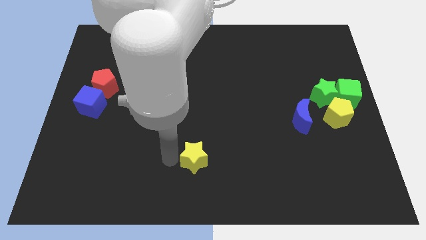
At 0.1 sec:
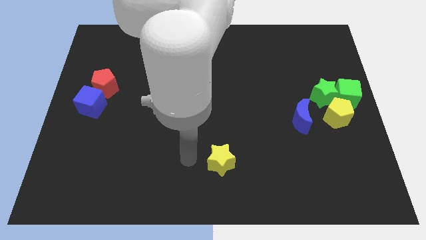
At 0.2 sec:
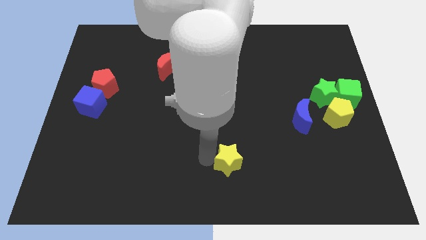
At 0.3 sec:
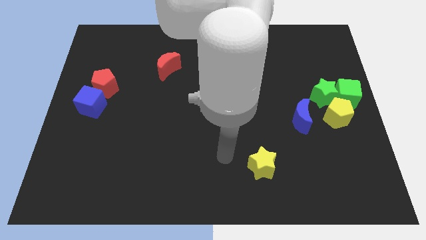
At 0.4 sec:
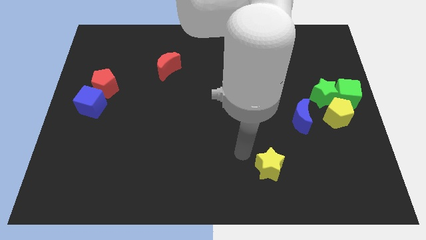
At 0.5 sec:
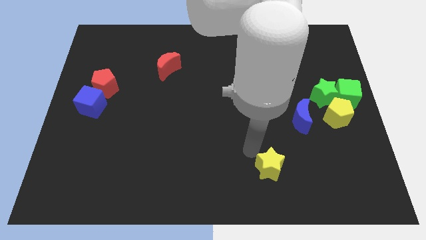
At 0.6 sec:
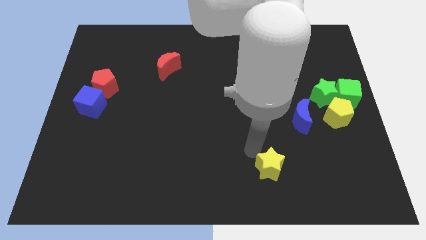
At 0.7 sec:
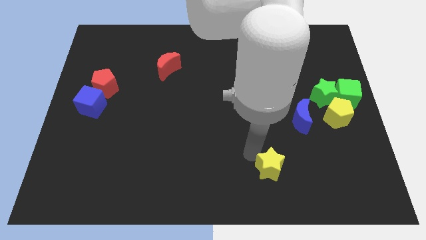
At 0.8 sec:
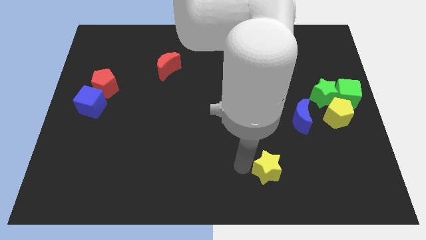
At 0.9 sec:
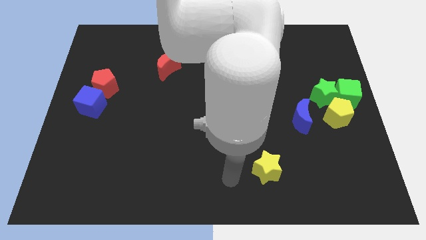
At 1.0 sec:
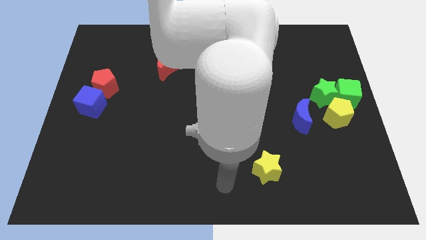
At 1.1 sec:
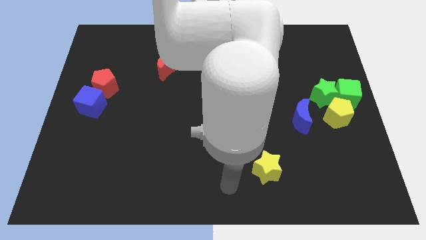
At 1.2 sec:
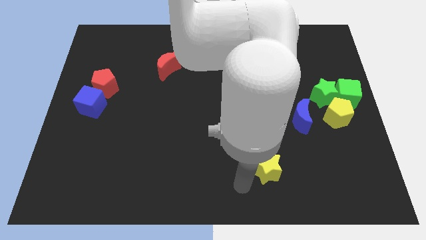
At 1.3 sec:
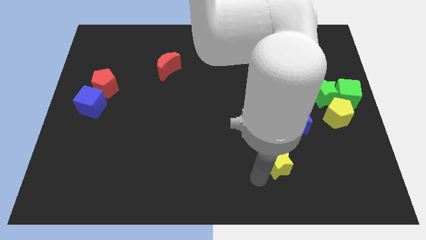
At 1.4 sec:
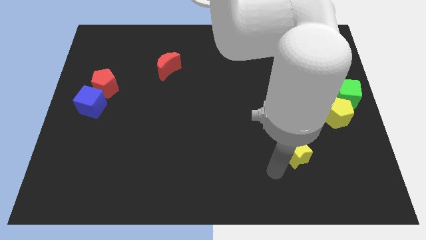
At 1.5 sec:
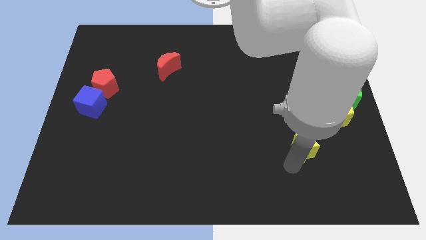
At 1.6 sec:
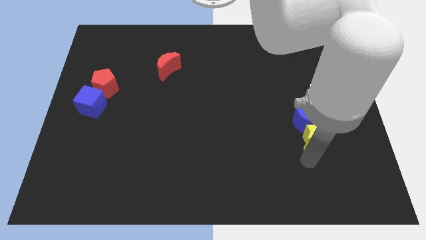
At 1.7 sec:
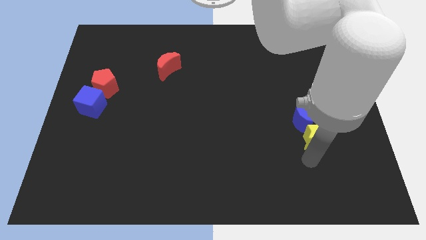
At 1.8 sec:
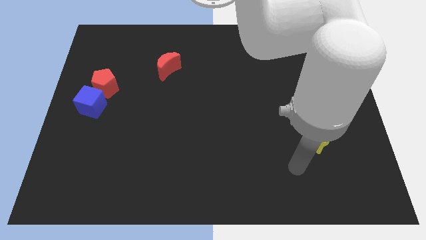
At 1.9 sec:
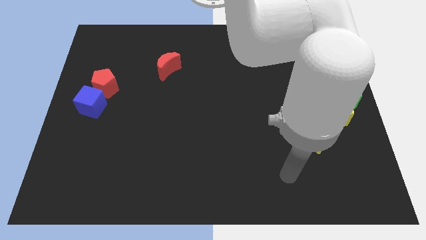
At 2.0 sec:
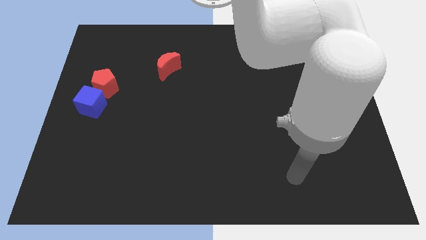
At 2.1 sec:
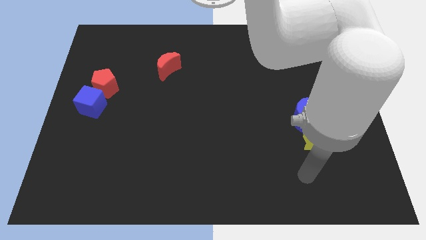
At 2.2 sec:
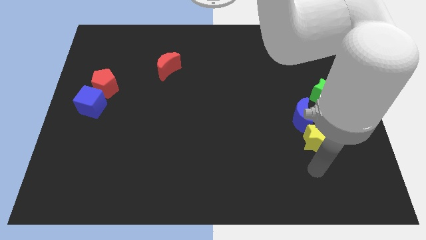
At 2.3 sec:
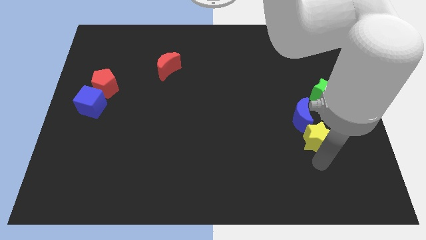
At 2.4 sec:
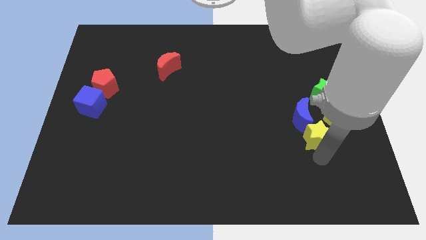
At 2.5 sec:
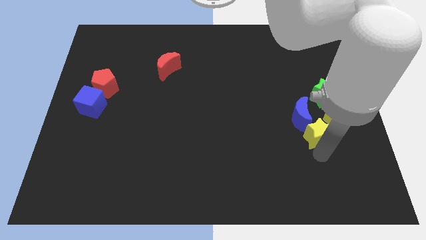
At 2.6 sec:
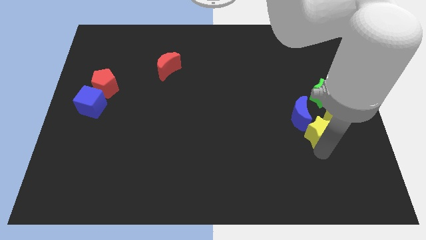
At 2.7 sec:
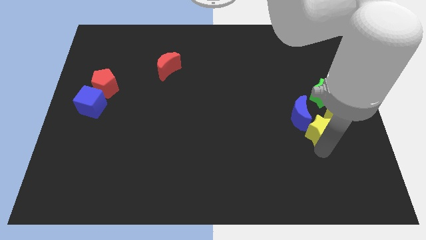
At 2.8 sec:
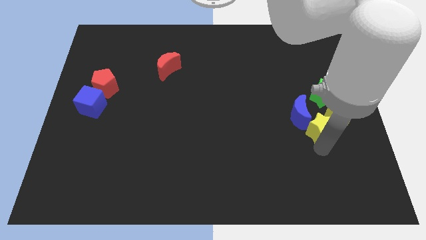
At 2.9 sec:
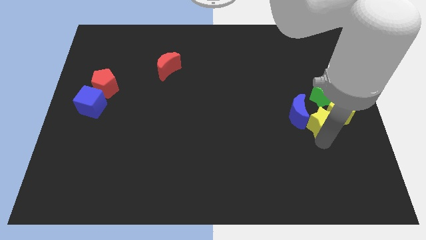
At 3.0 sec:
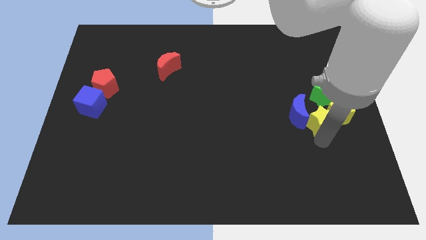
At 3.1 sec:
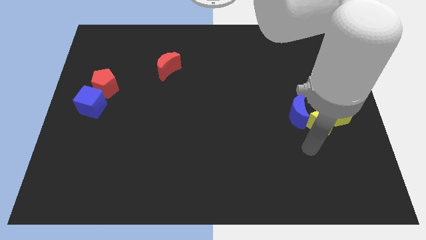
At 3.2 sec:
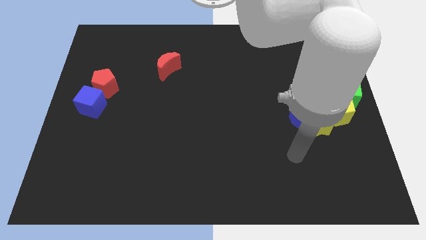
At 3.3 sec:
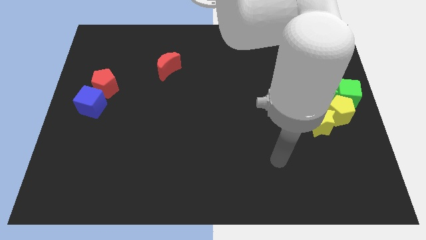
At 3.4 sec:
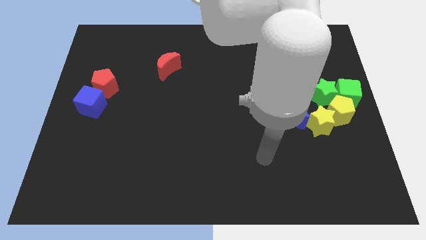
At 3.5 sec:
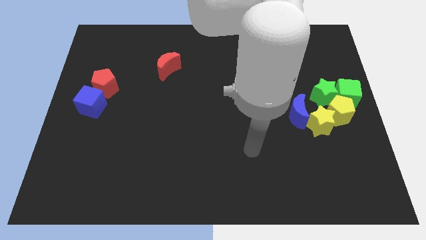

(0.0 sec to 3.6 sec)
move the yellow star to the right of the blue crescent

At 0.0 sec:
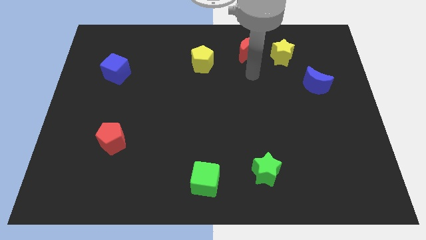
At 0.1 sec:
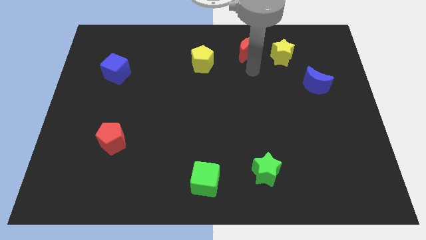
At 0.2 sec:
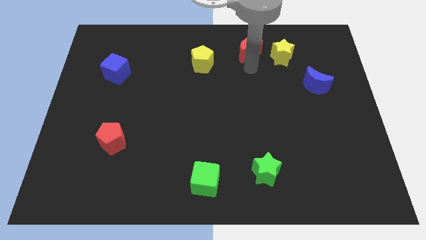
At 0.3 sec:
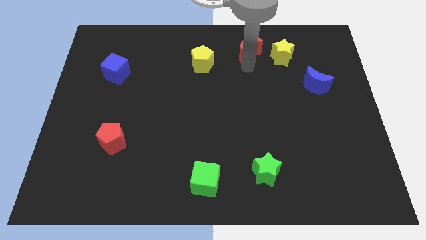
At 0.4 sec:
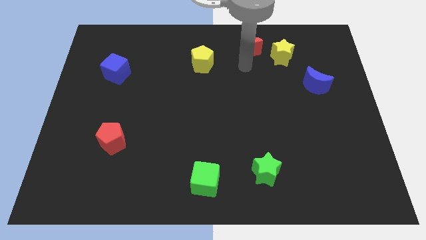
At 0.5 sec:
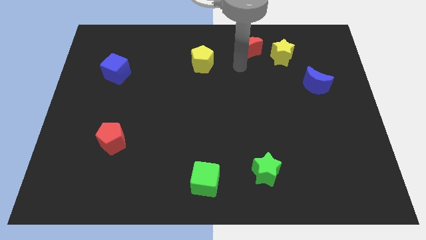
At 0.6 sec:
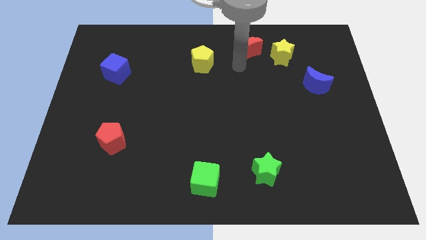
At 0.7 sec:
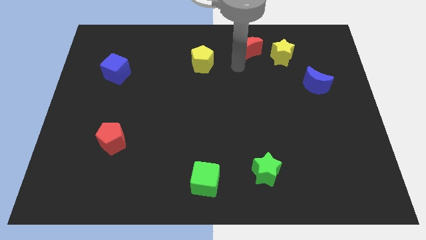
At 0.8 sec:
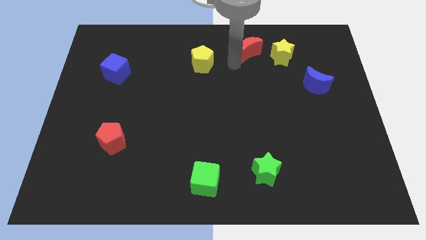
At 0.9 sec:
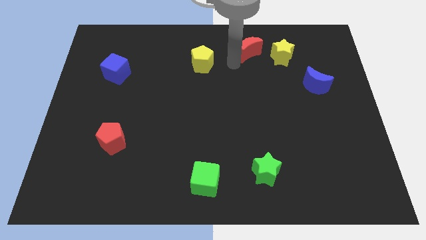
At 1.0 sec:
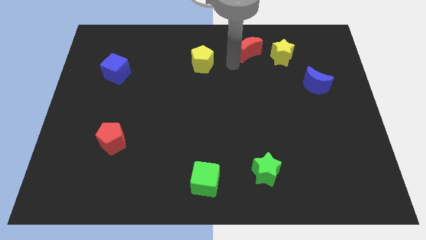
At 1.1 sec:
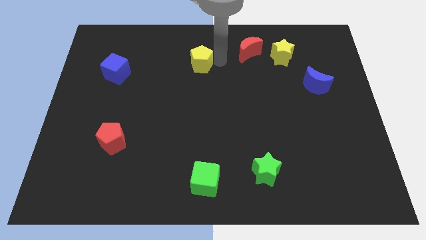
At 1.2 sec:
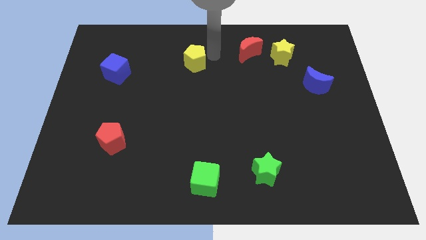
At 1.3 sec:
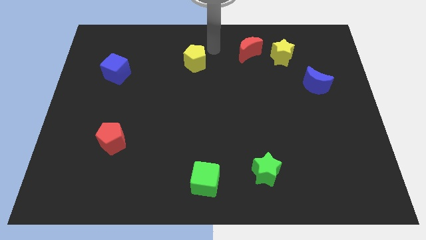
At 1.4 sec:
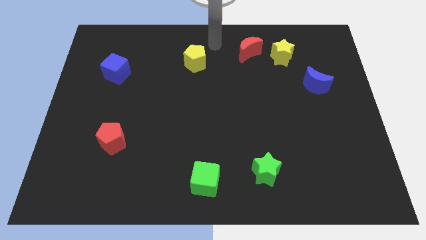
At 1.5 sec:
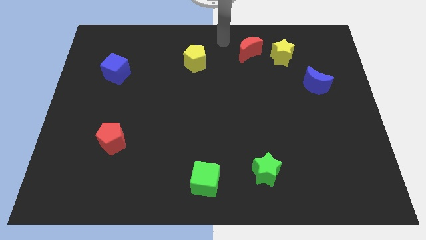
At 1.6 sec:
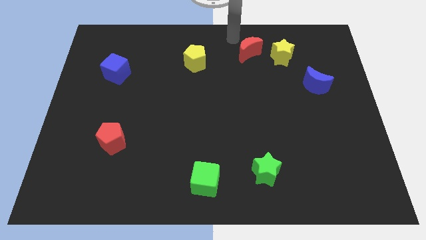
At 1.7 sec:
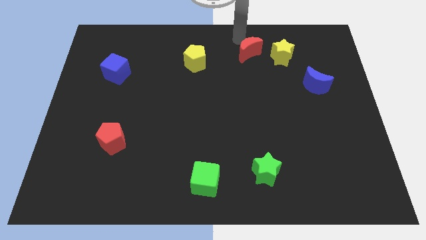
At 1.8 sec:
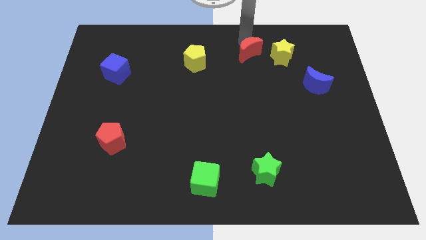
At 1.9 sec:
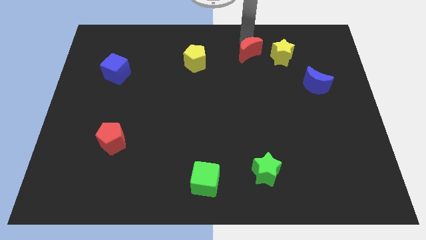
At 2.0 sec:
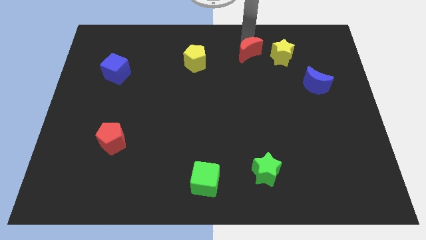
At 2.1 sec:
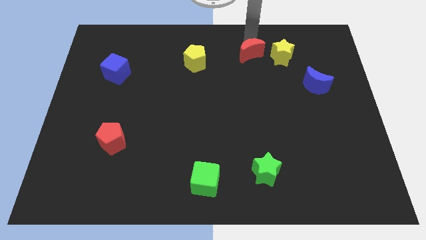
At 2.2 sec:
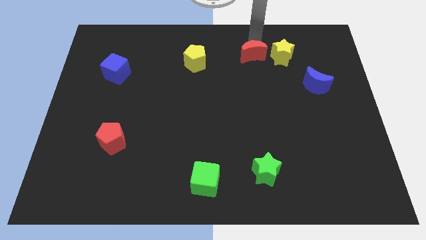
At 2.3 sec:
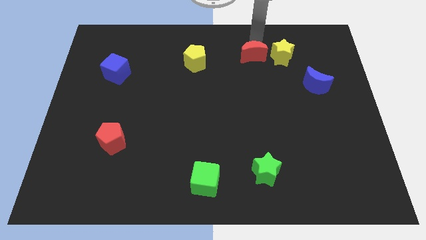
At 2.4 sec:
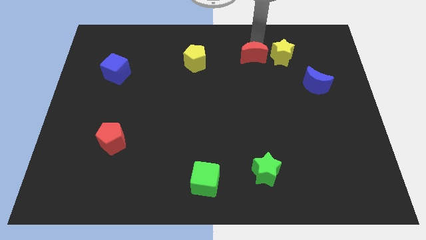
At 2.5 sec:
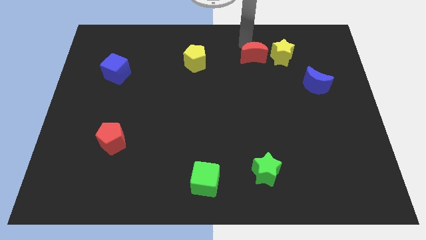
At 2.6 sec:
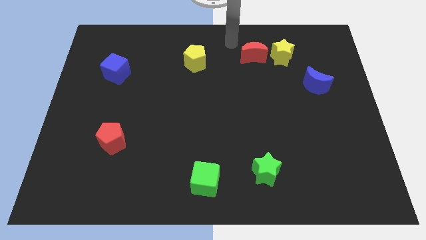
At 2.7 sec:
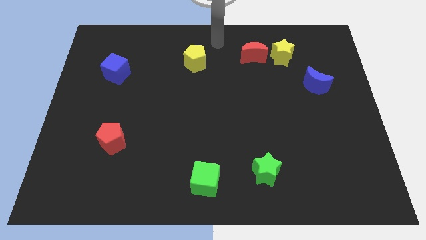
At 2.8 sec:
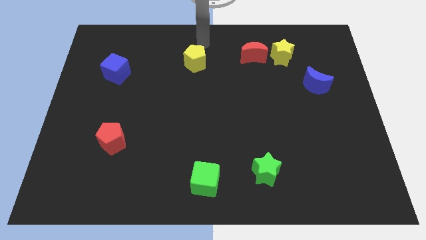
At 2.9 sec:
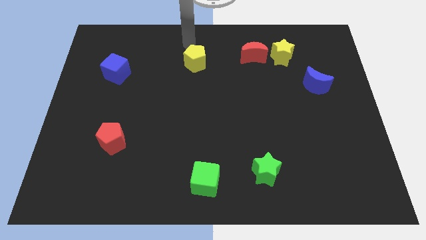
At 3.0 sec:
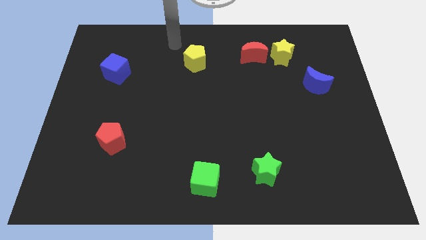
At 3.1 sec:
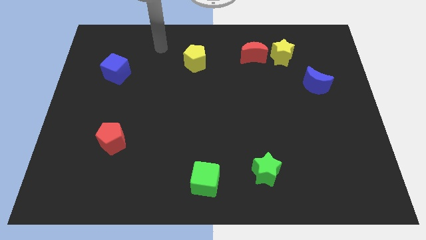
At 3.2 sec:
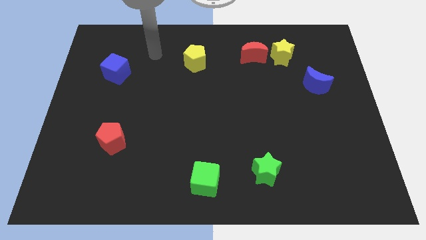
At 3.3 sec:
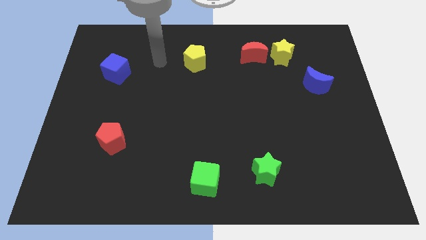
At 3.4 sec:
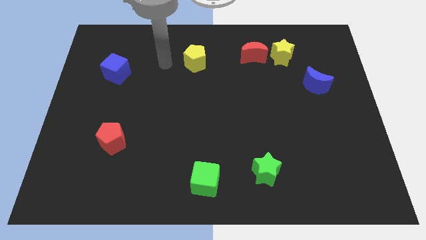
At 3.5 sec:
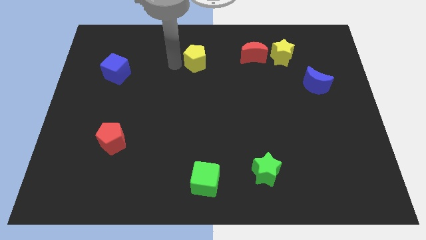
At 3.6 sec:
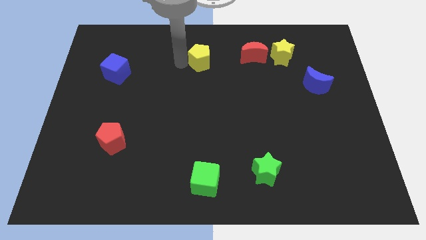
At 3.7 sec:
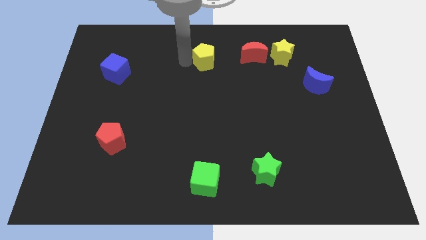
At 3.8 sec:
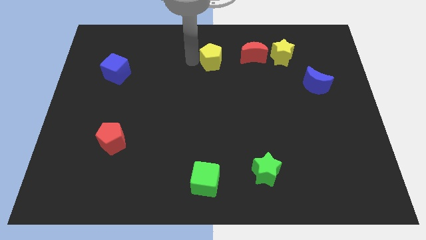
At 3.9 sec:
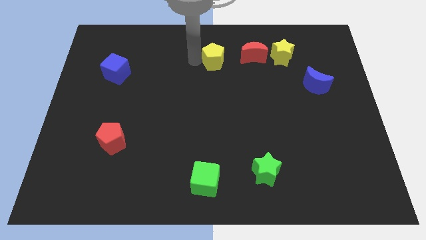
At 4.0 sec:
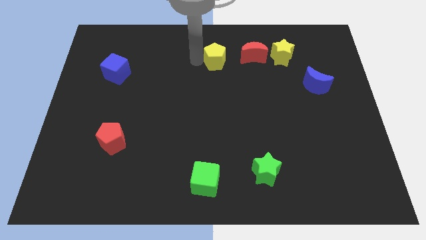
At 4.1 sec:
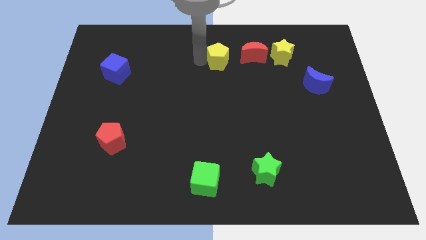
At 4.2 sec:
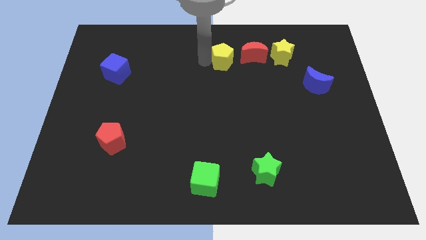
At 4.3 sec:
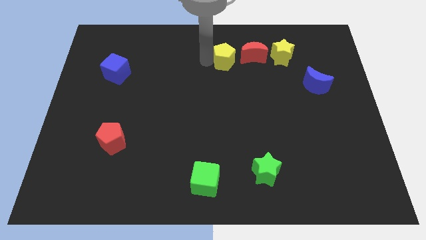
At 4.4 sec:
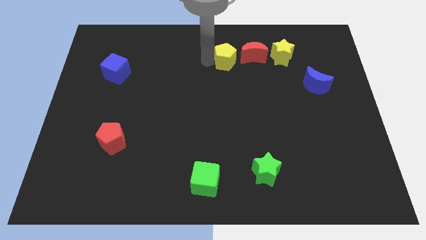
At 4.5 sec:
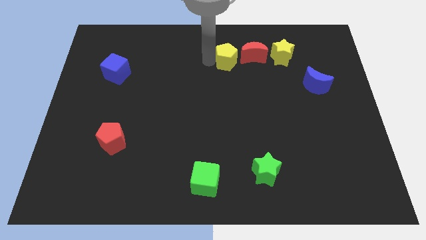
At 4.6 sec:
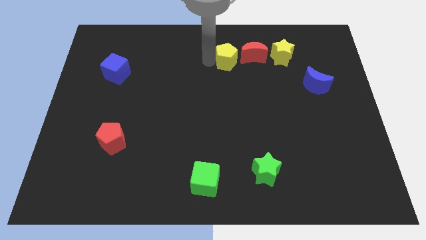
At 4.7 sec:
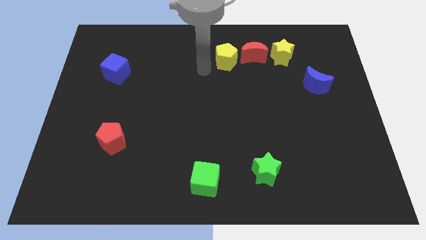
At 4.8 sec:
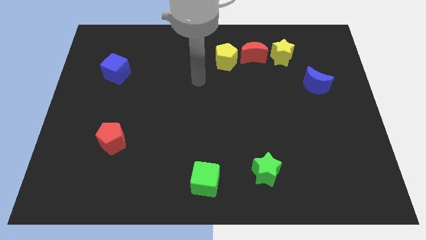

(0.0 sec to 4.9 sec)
place the yellow pentagon left to the red moon

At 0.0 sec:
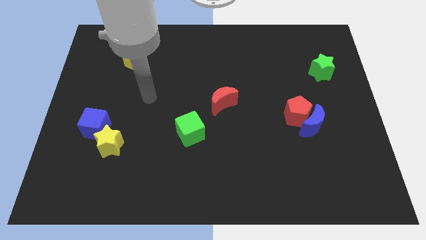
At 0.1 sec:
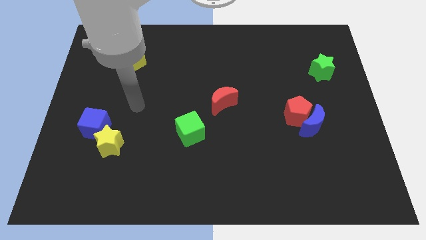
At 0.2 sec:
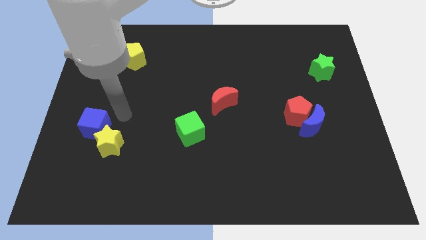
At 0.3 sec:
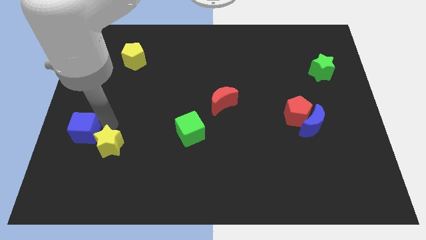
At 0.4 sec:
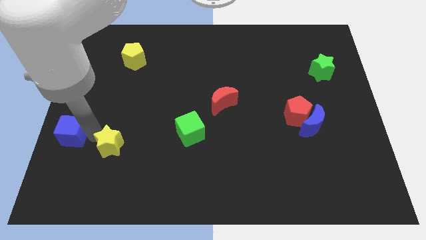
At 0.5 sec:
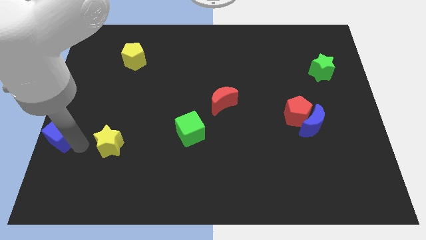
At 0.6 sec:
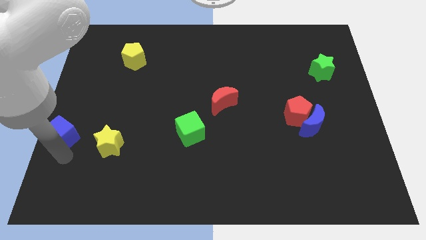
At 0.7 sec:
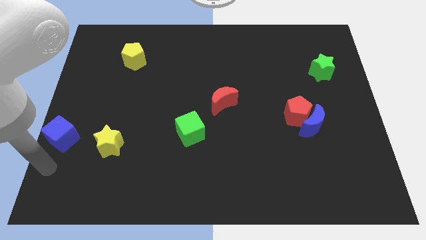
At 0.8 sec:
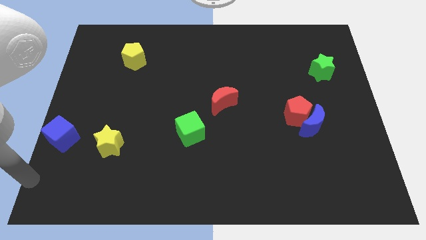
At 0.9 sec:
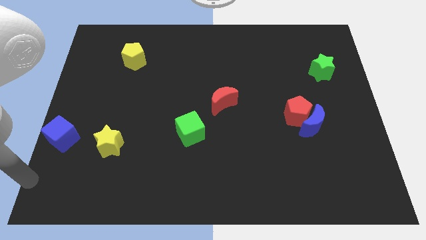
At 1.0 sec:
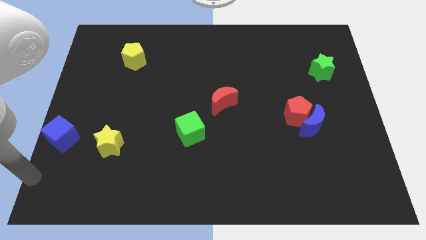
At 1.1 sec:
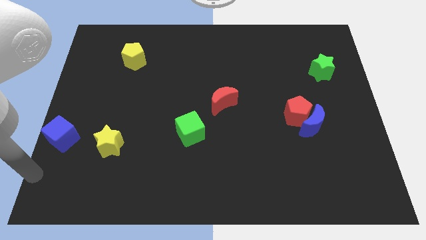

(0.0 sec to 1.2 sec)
separate the blue cube from the yellow star
